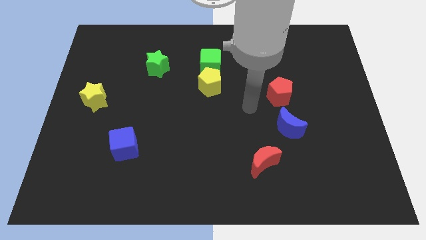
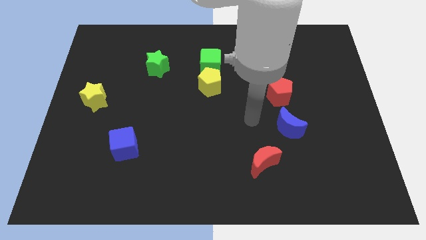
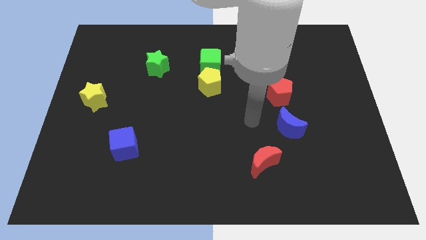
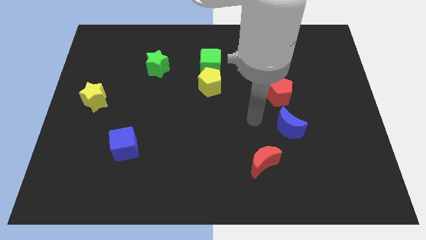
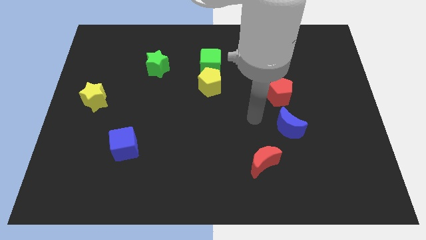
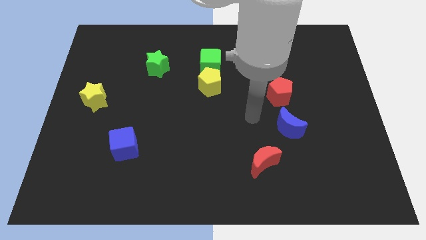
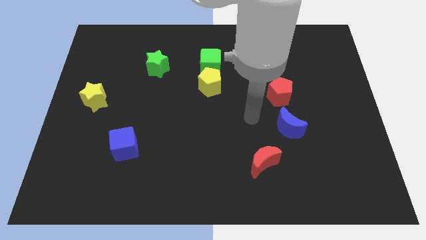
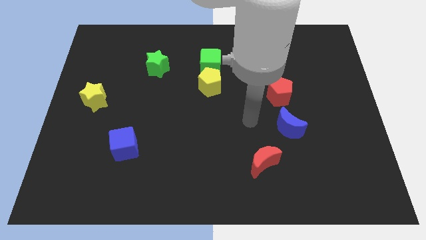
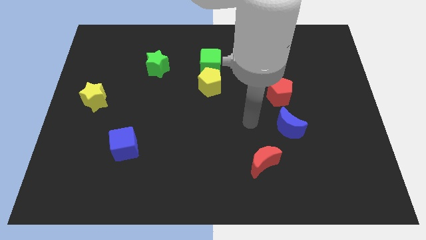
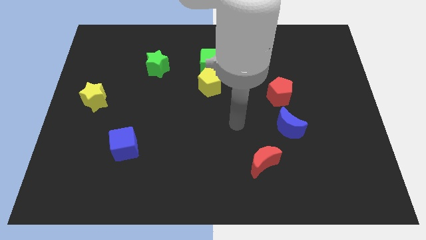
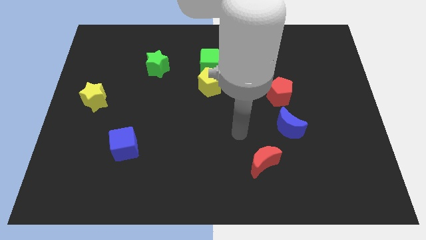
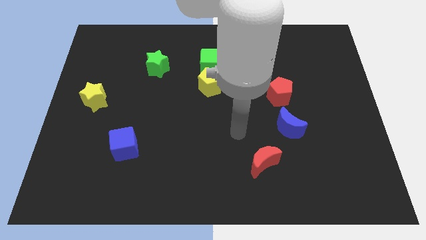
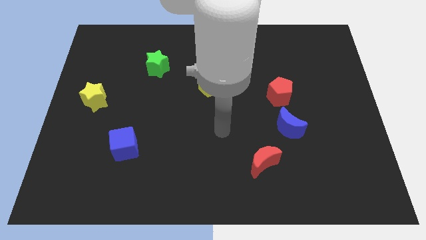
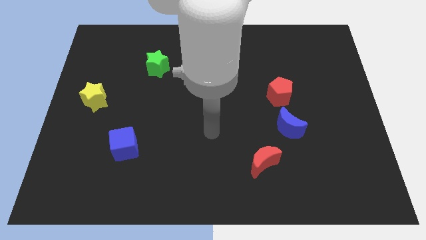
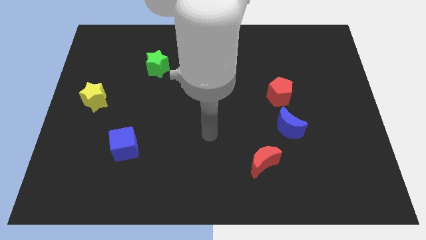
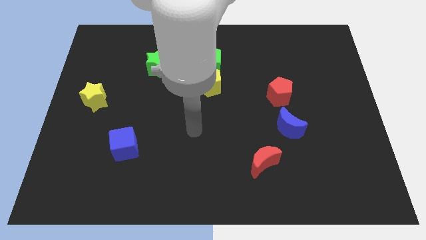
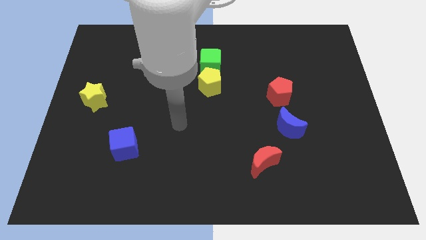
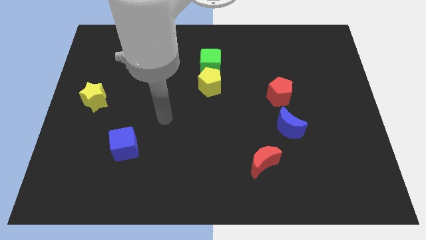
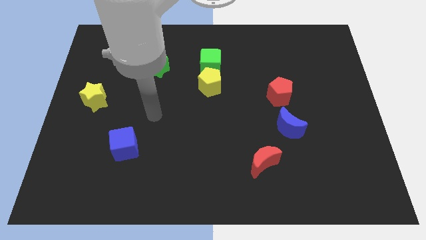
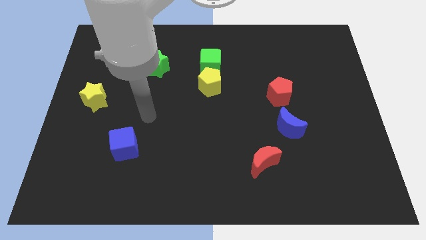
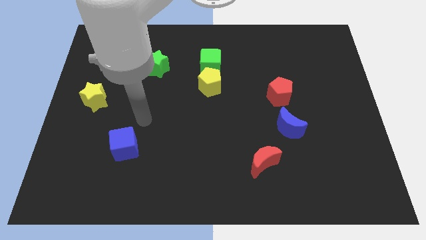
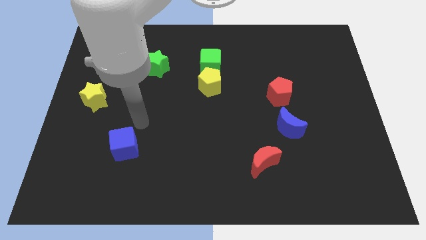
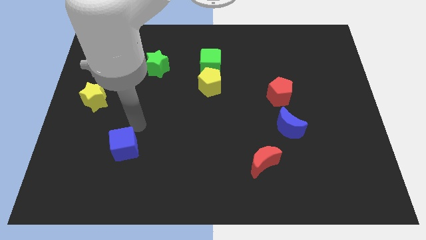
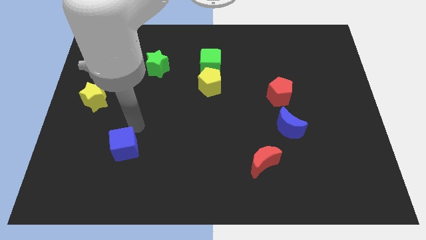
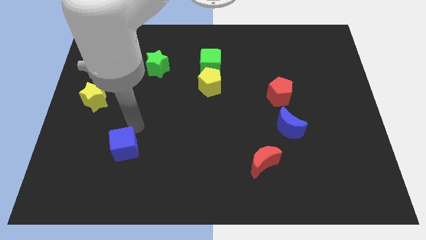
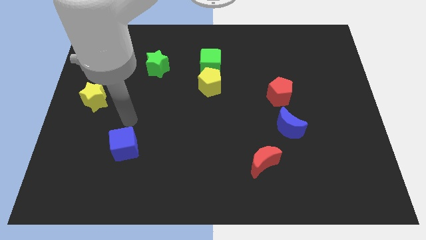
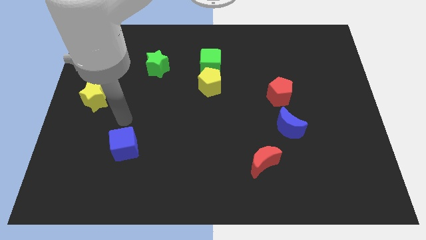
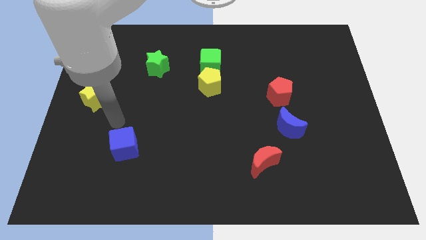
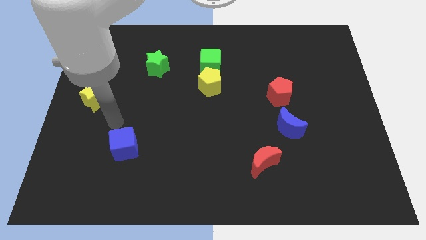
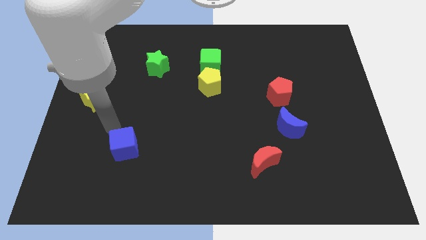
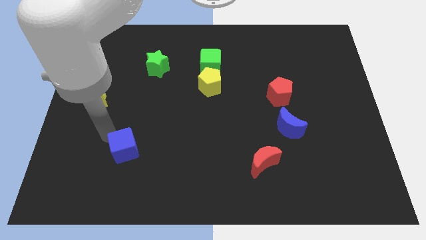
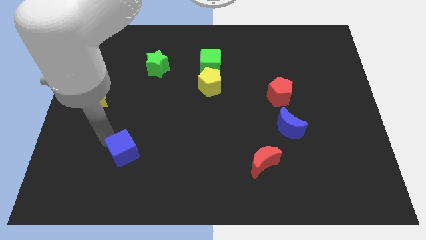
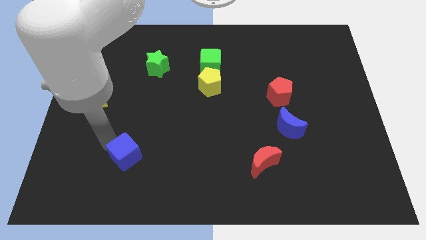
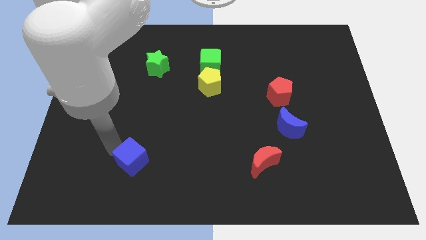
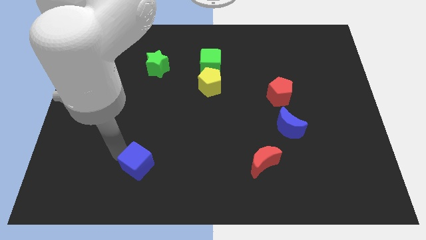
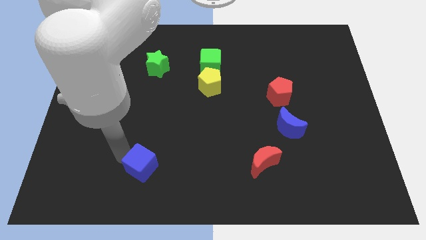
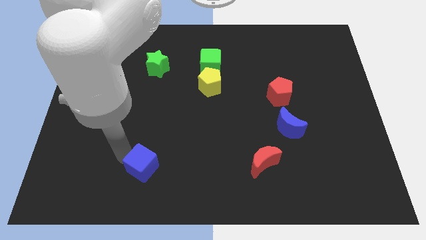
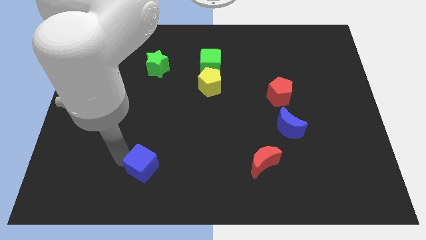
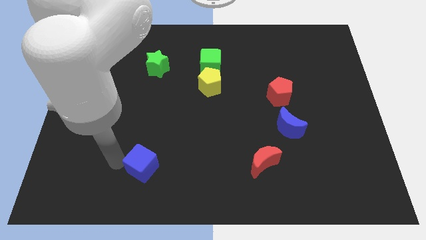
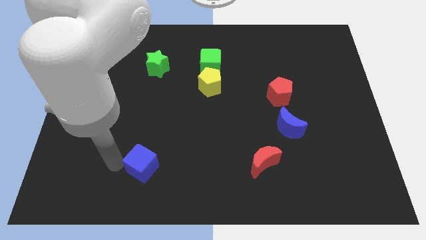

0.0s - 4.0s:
push the blue cube to the right of the board

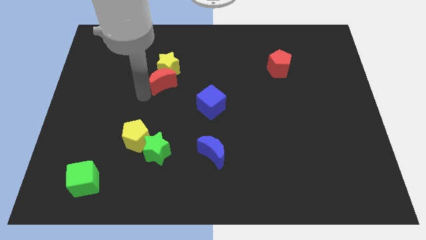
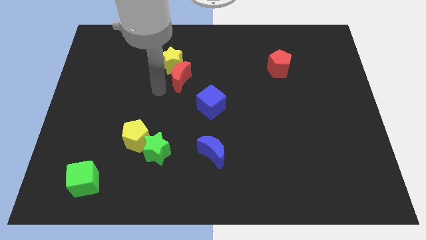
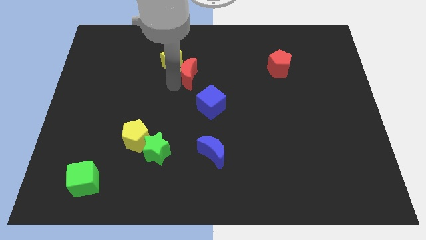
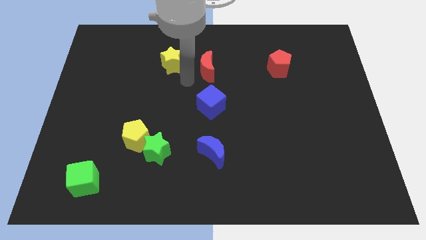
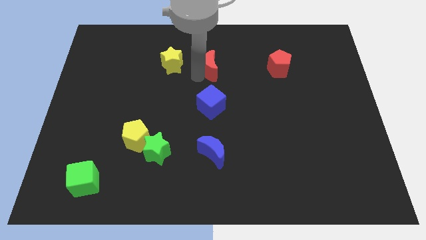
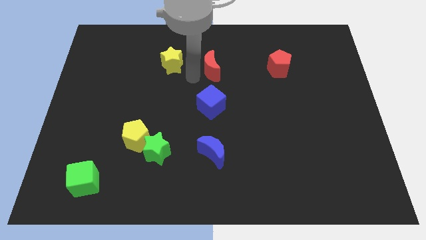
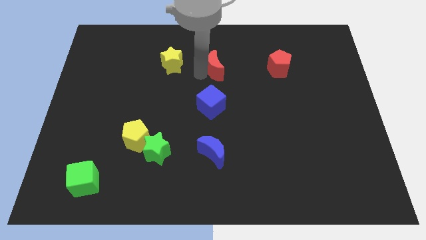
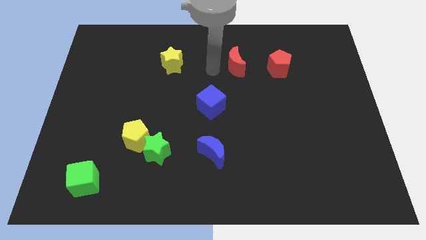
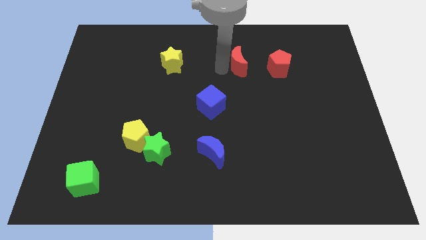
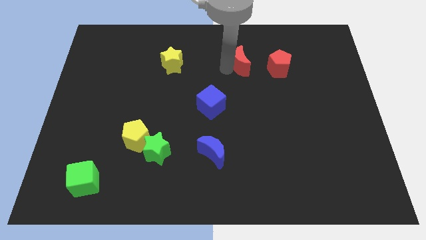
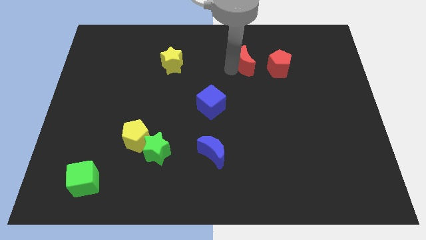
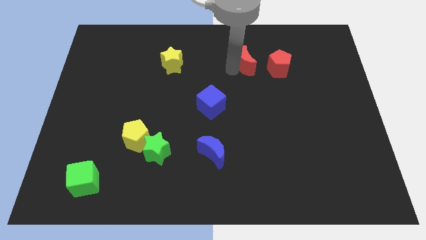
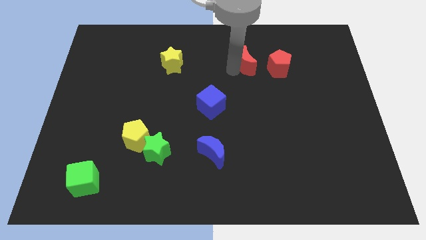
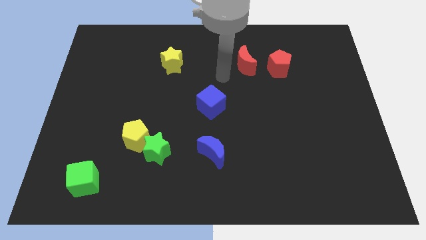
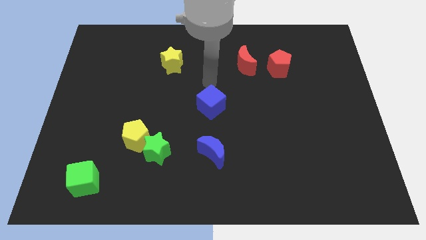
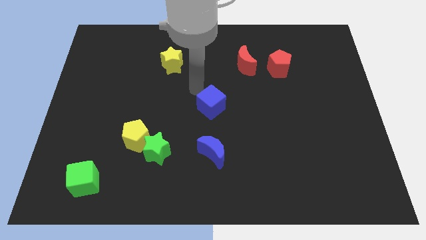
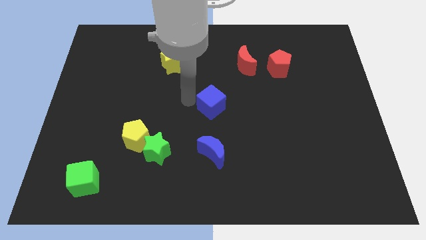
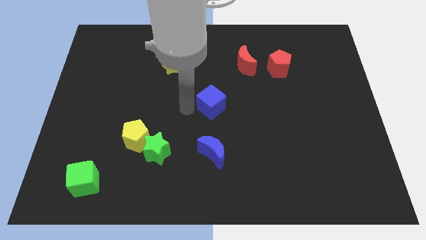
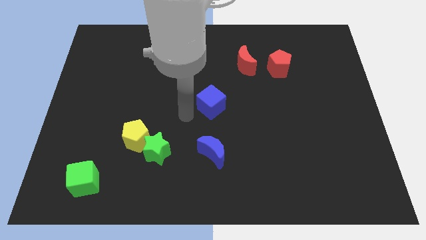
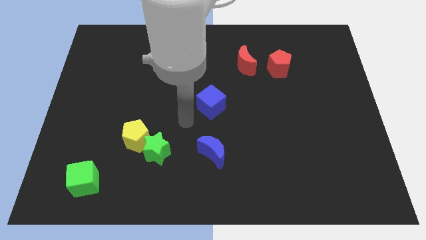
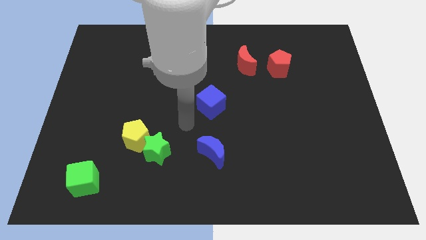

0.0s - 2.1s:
move the red moon left to the red pentagon

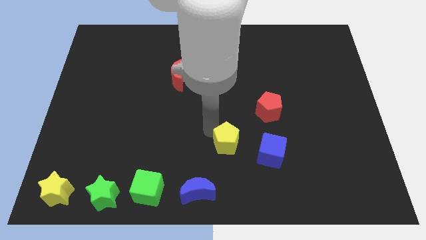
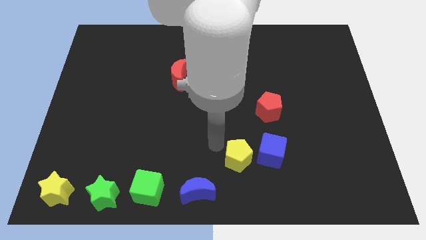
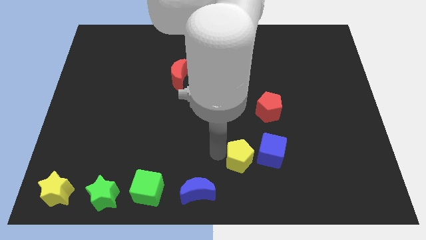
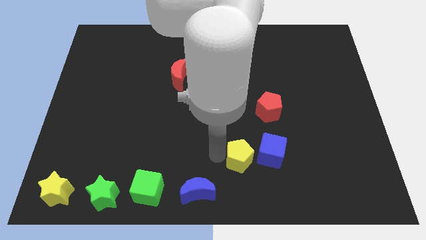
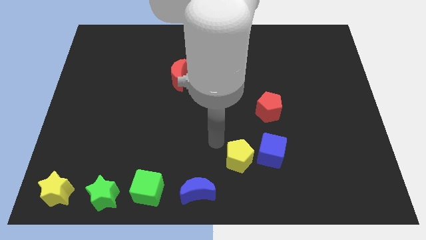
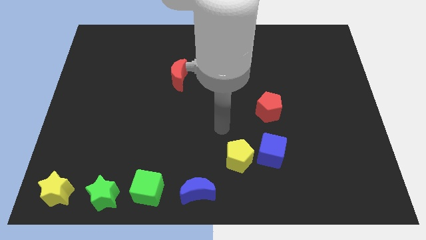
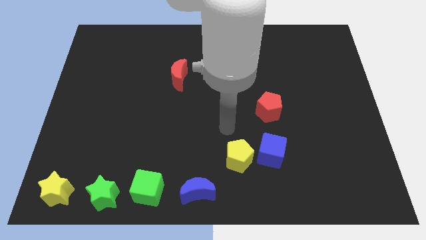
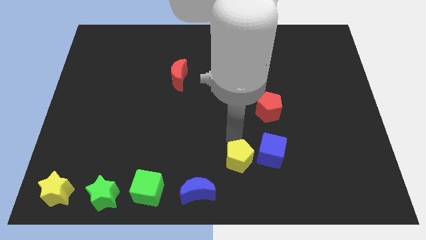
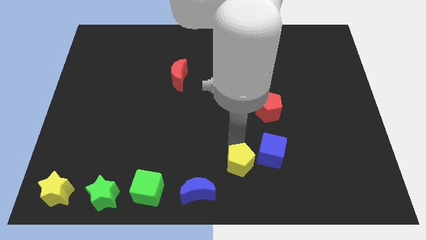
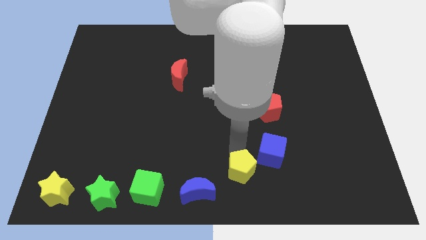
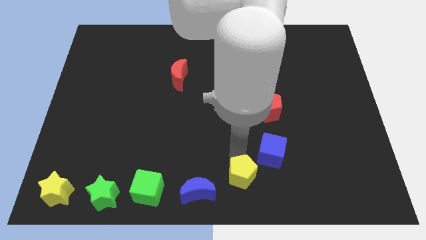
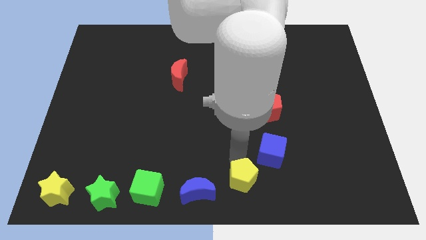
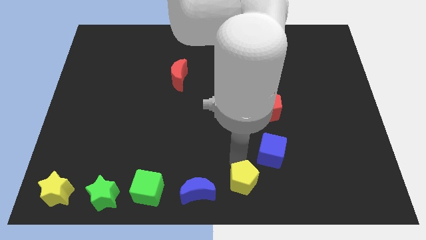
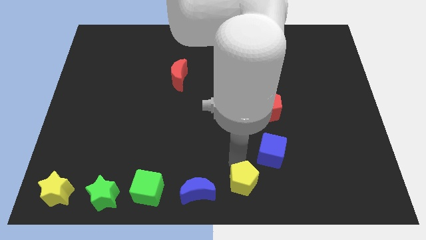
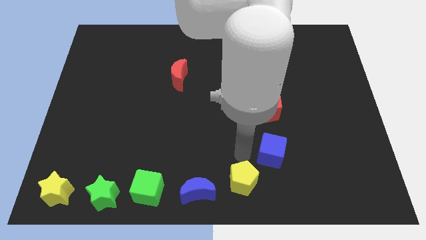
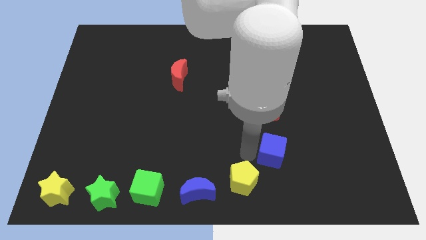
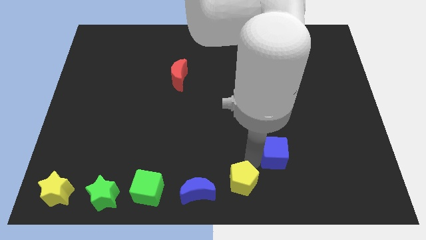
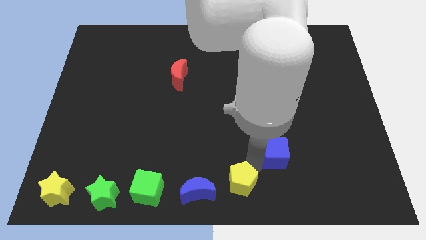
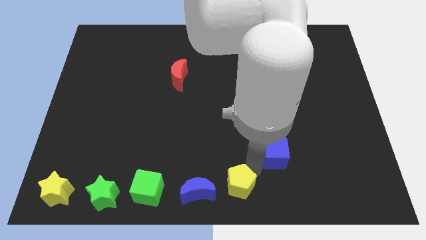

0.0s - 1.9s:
place the yellow pentagon right to the blue crescent

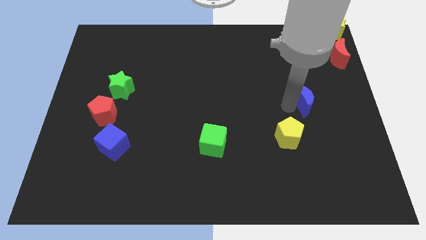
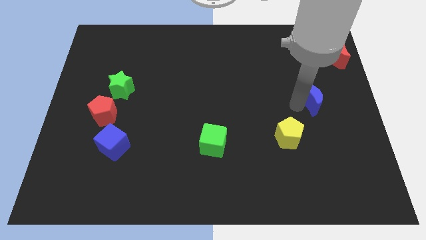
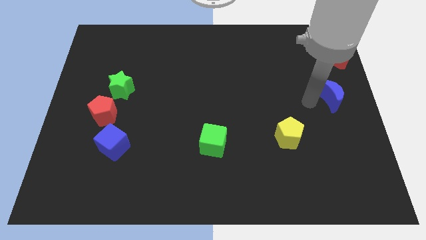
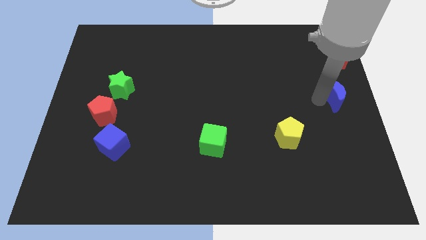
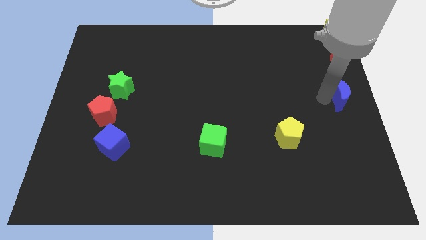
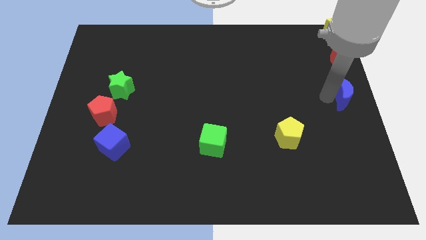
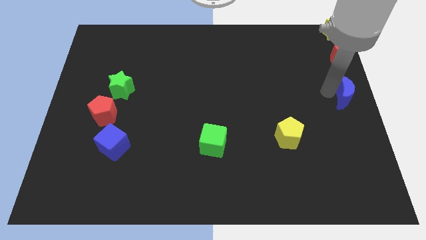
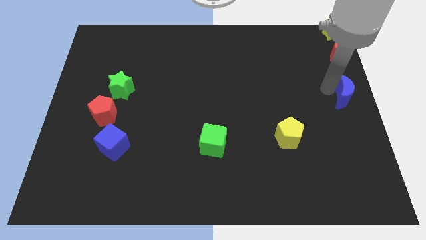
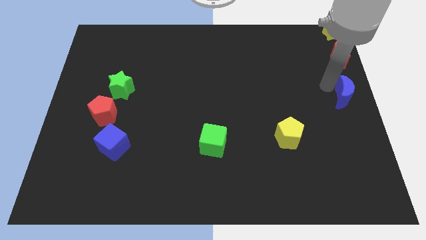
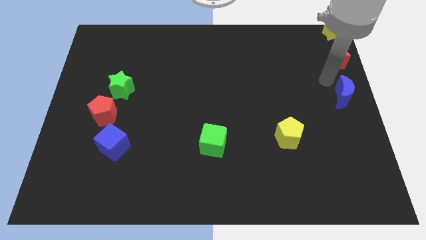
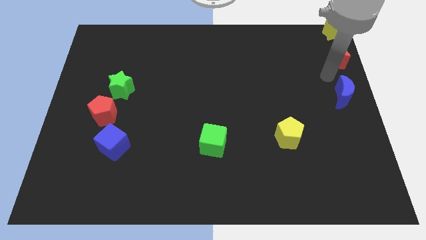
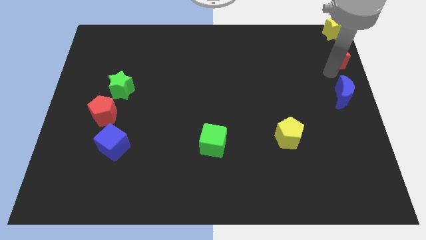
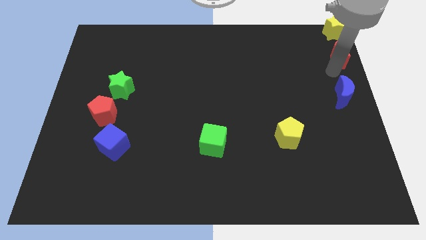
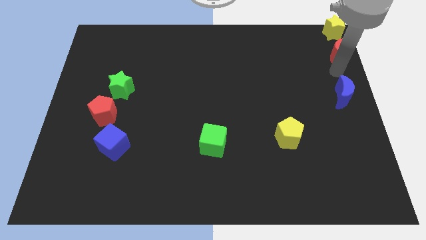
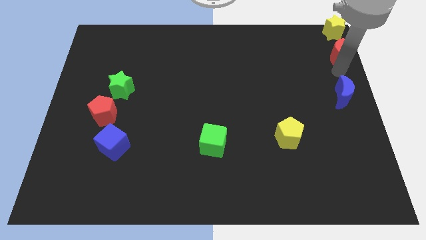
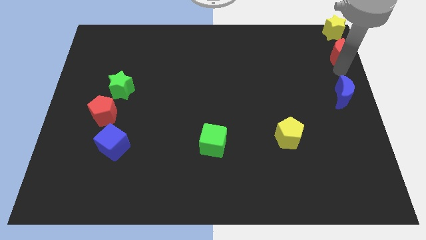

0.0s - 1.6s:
push the blue moon below the red moon
